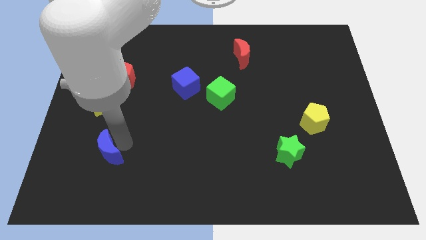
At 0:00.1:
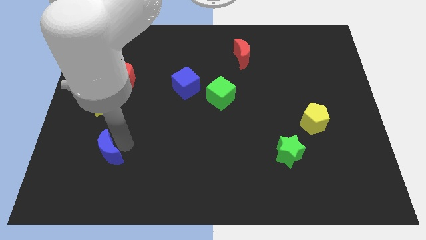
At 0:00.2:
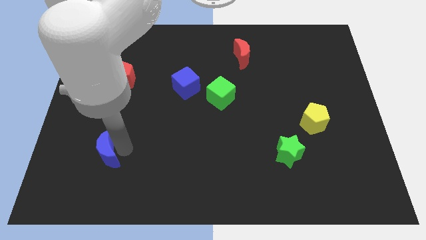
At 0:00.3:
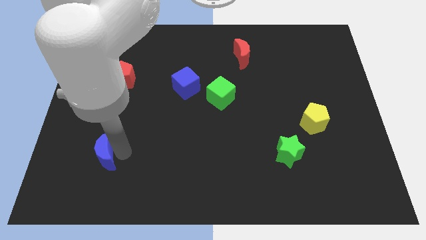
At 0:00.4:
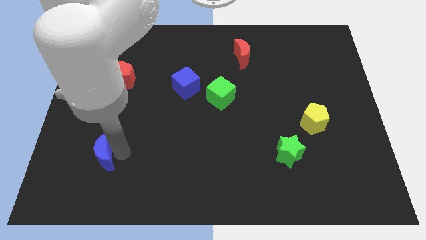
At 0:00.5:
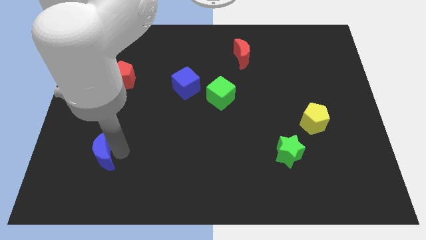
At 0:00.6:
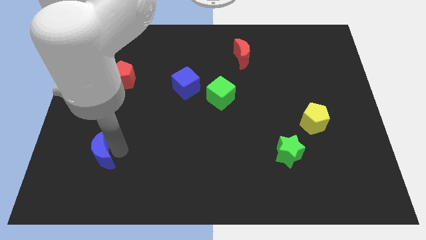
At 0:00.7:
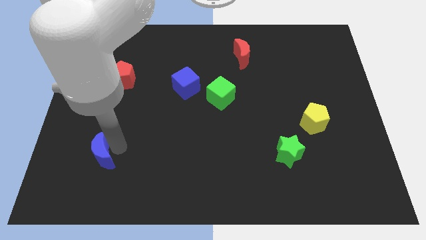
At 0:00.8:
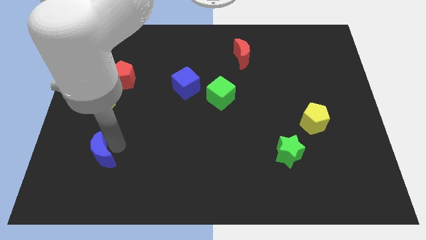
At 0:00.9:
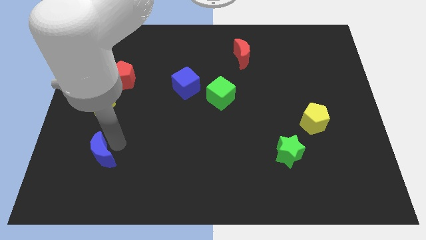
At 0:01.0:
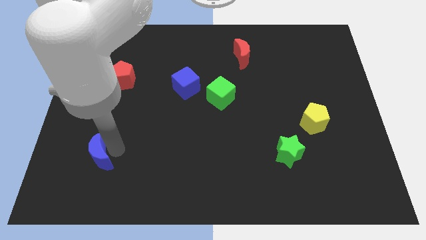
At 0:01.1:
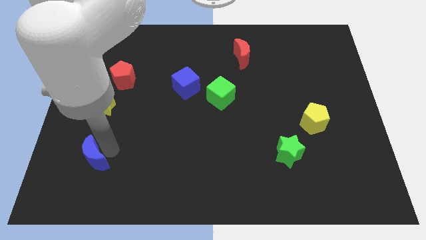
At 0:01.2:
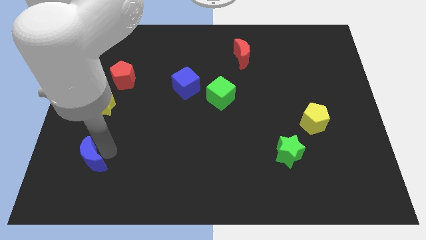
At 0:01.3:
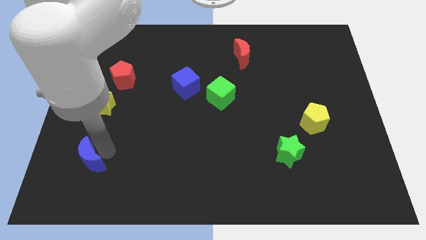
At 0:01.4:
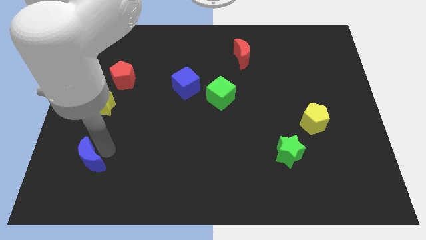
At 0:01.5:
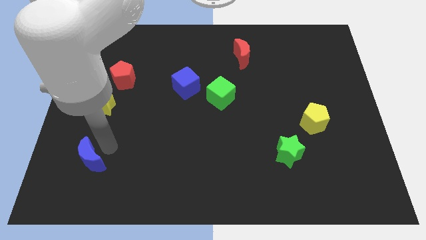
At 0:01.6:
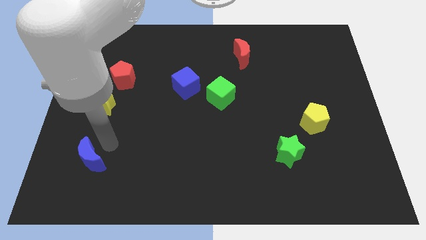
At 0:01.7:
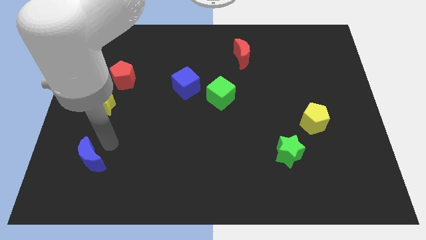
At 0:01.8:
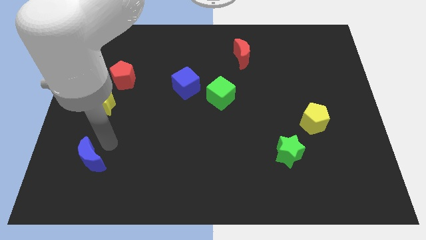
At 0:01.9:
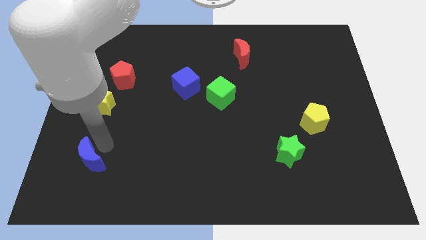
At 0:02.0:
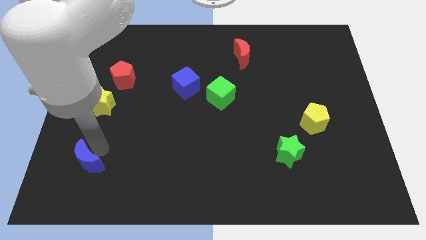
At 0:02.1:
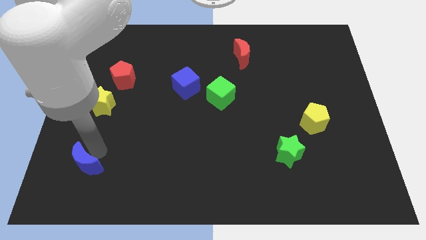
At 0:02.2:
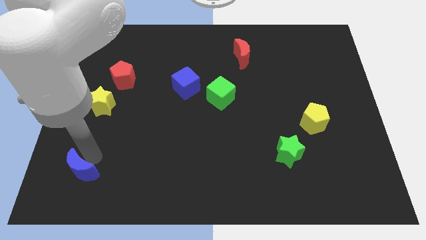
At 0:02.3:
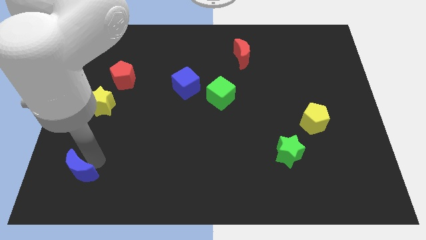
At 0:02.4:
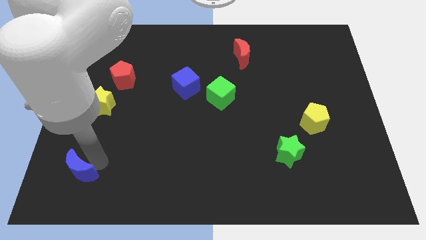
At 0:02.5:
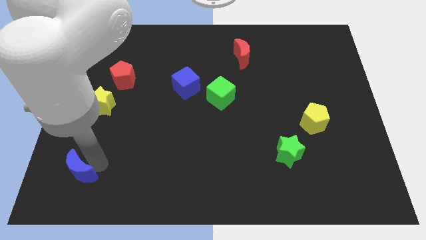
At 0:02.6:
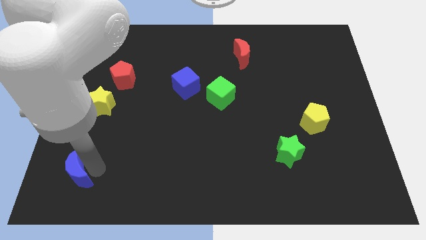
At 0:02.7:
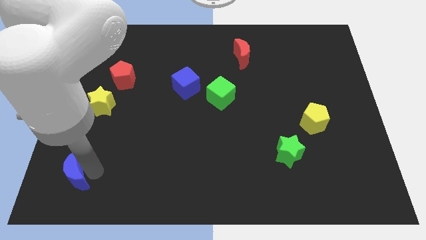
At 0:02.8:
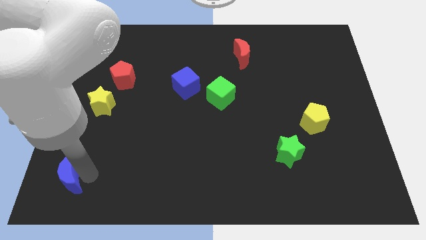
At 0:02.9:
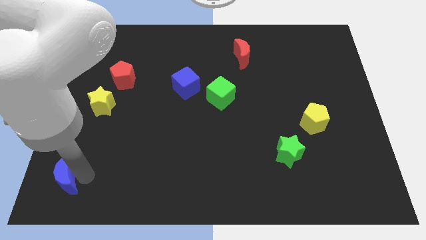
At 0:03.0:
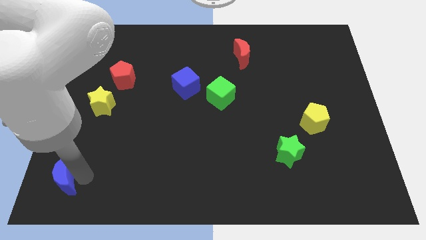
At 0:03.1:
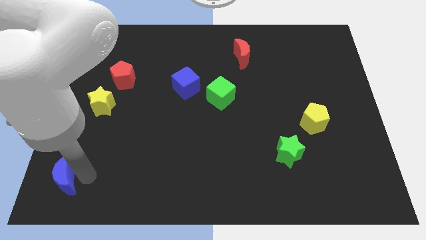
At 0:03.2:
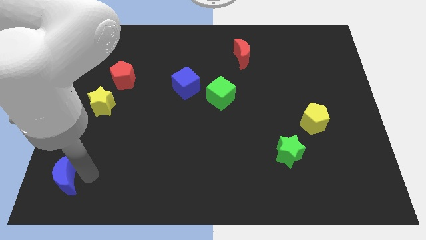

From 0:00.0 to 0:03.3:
push the blue moon towards the left bottom corner

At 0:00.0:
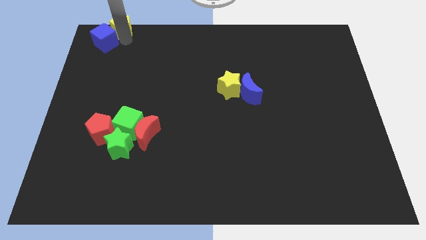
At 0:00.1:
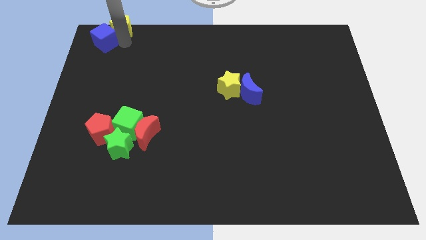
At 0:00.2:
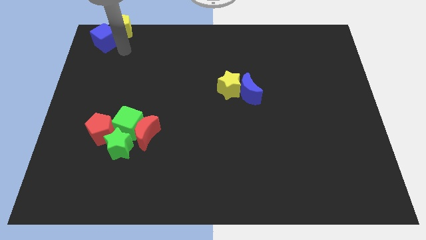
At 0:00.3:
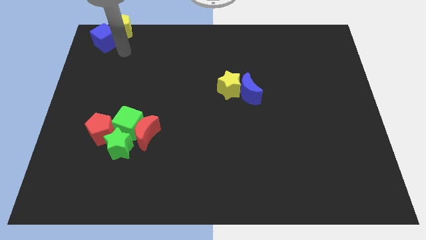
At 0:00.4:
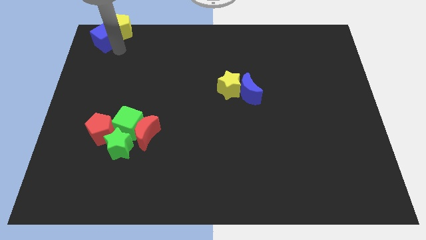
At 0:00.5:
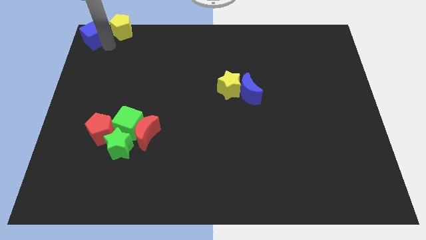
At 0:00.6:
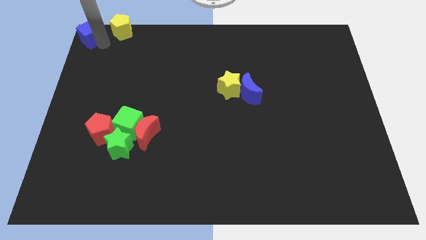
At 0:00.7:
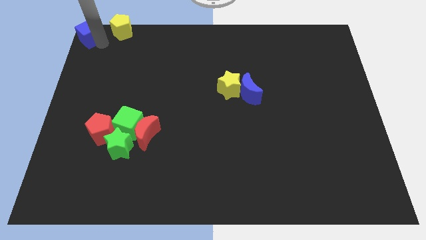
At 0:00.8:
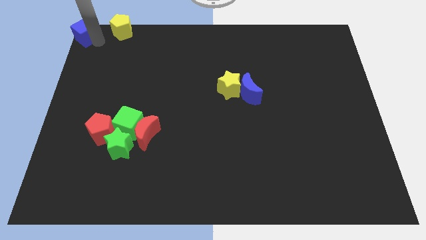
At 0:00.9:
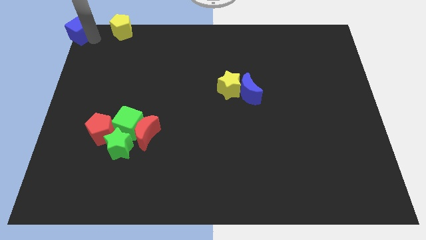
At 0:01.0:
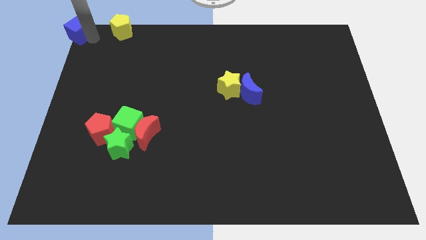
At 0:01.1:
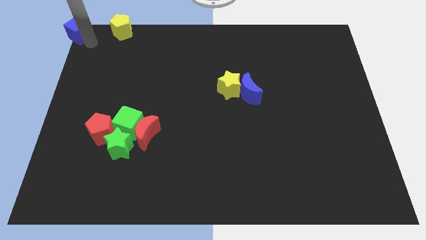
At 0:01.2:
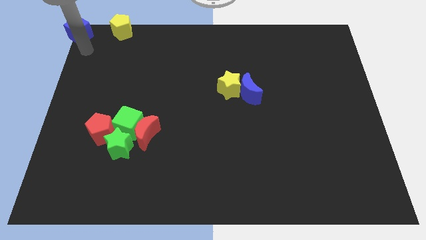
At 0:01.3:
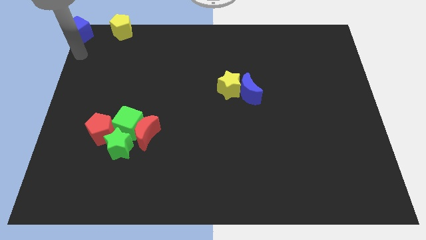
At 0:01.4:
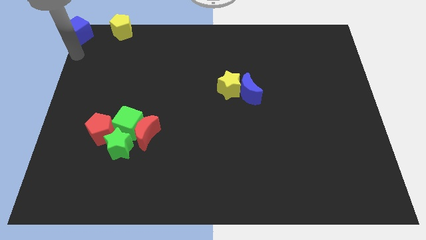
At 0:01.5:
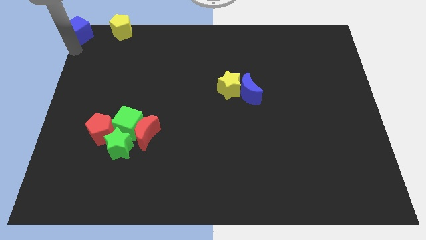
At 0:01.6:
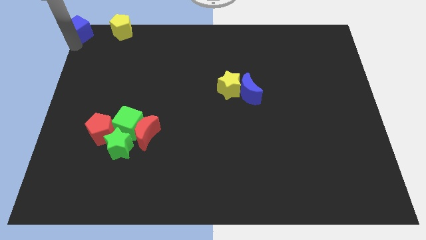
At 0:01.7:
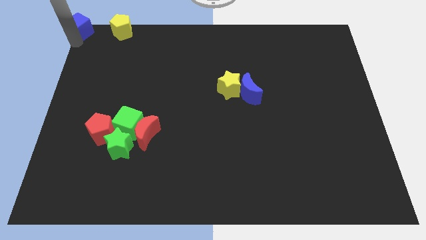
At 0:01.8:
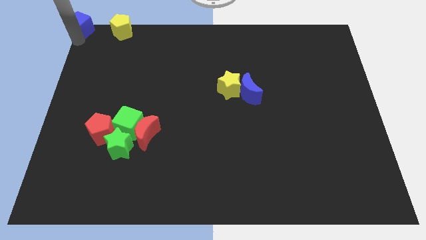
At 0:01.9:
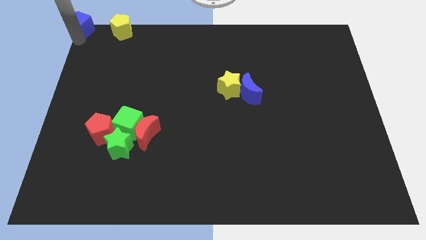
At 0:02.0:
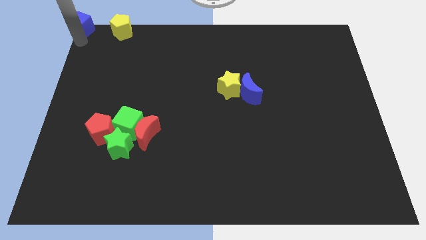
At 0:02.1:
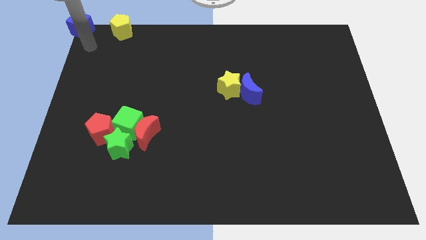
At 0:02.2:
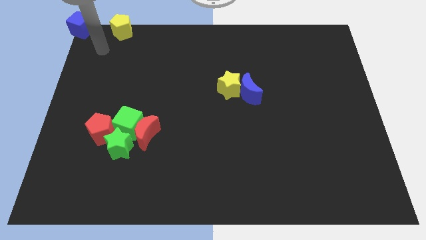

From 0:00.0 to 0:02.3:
push the blue cube to the left of the yellow pentagon

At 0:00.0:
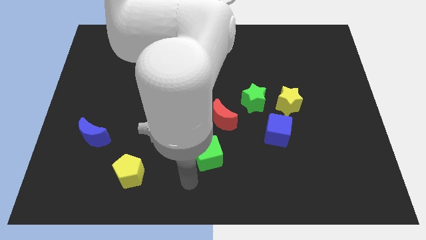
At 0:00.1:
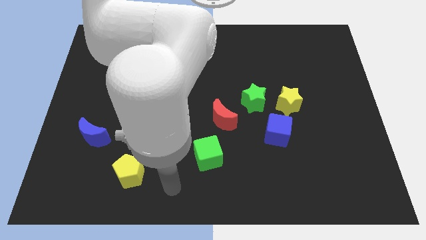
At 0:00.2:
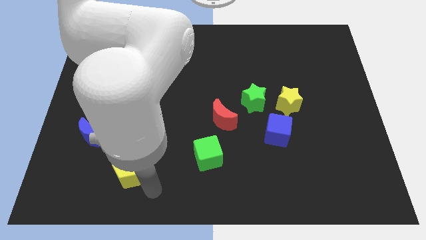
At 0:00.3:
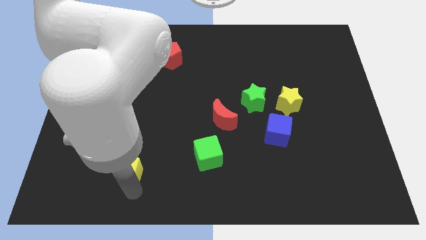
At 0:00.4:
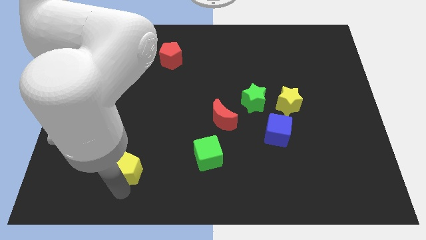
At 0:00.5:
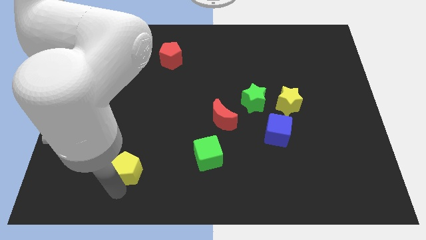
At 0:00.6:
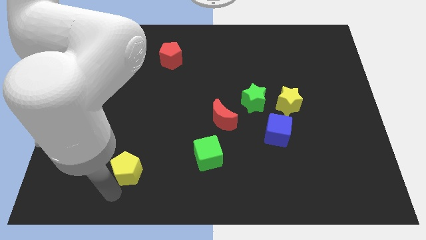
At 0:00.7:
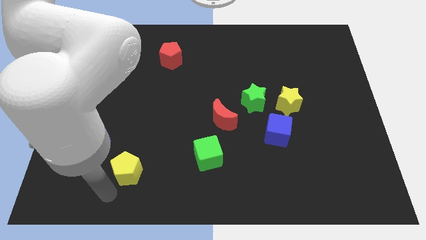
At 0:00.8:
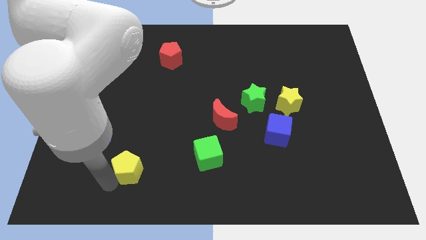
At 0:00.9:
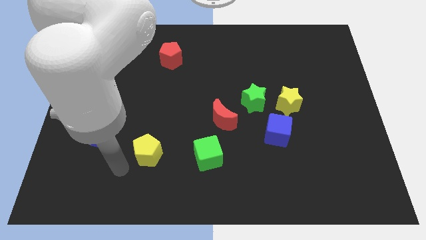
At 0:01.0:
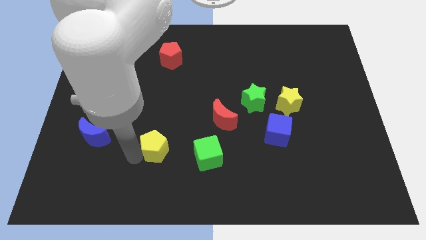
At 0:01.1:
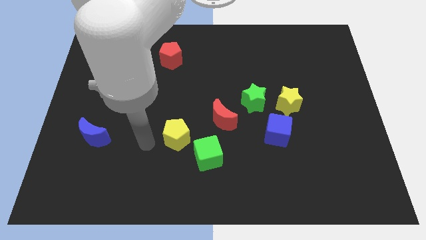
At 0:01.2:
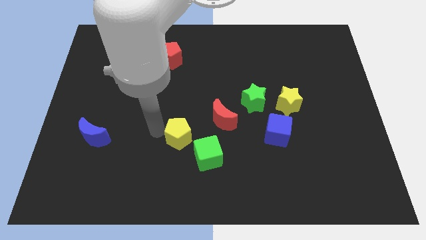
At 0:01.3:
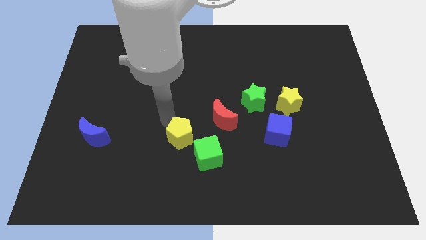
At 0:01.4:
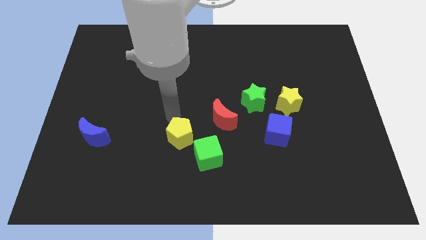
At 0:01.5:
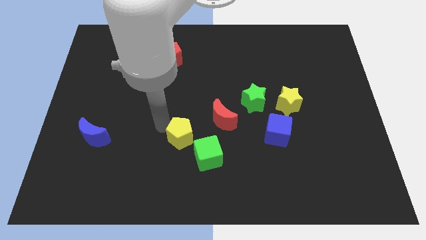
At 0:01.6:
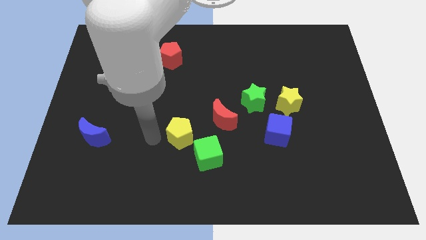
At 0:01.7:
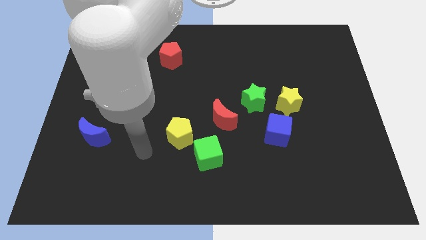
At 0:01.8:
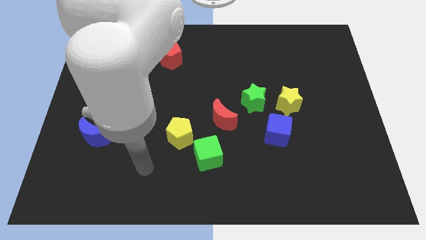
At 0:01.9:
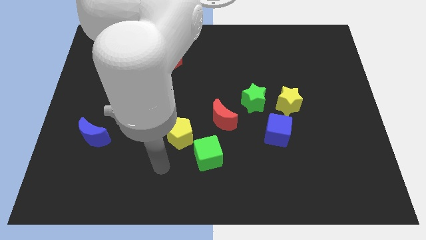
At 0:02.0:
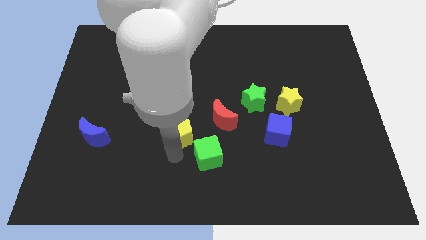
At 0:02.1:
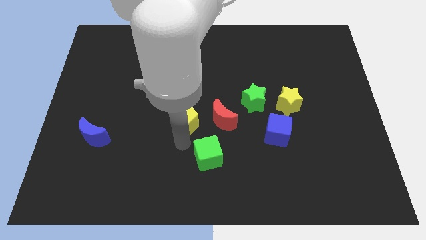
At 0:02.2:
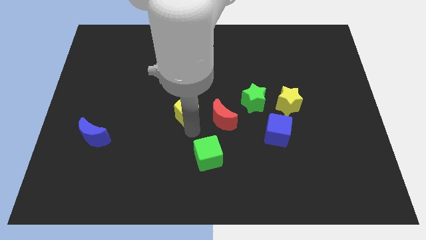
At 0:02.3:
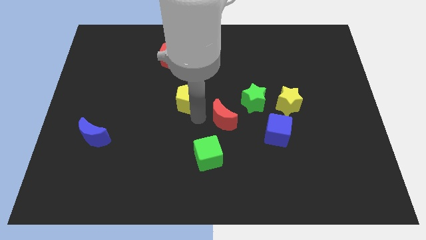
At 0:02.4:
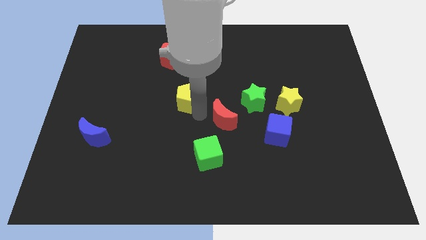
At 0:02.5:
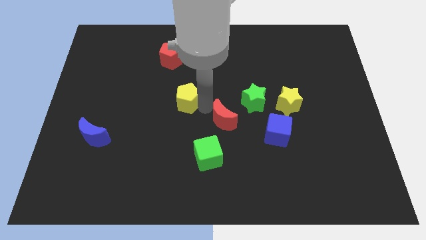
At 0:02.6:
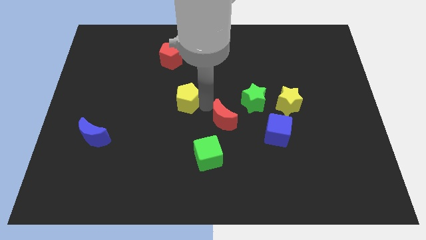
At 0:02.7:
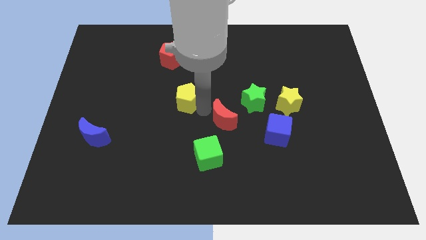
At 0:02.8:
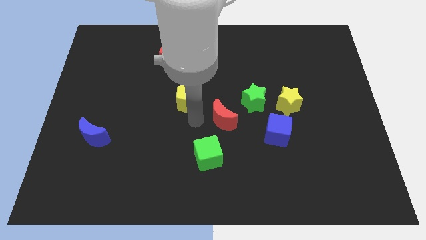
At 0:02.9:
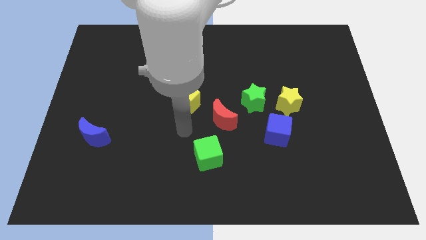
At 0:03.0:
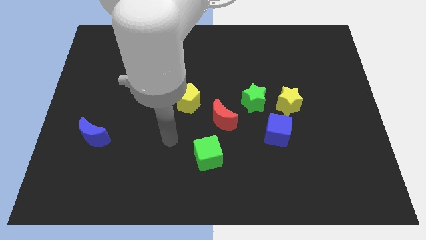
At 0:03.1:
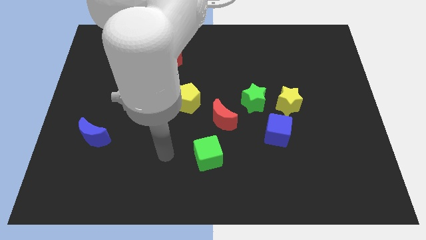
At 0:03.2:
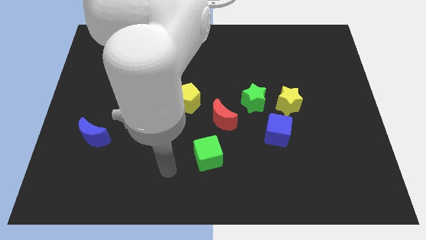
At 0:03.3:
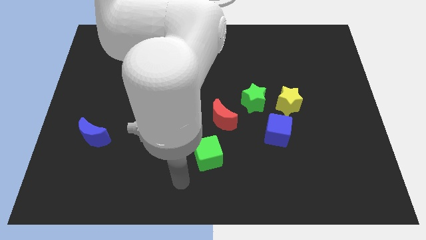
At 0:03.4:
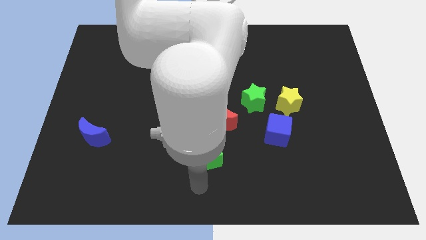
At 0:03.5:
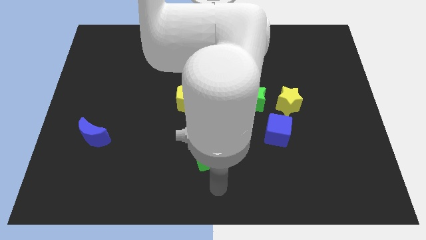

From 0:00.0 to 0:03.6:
push the yellow pentagon diagonally top left of the red crescent
